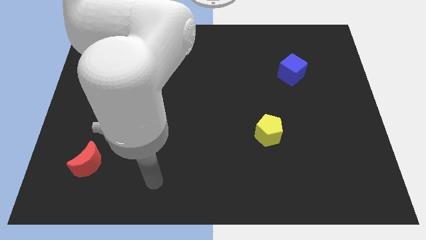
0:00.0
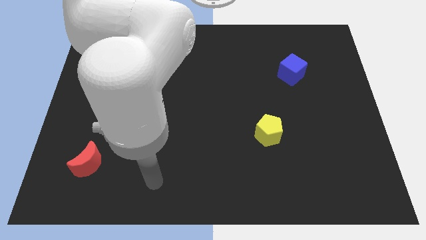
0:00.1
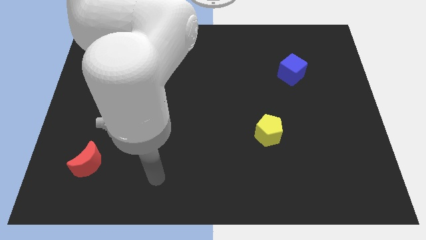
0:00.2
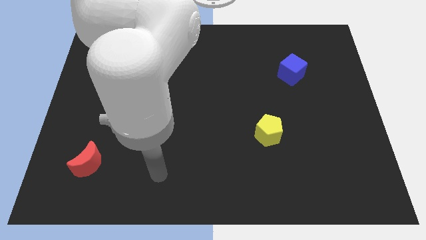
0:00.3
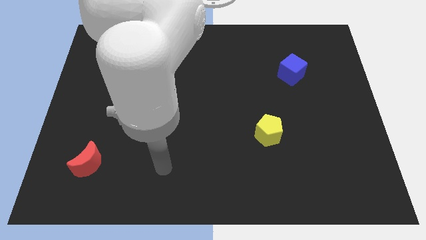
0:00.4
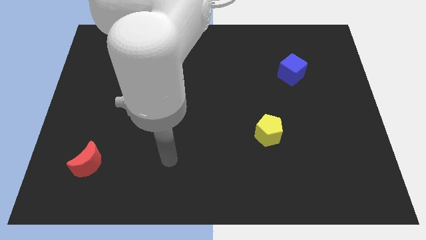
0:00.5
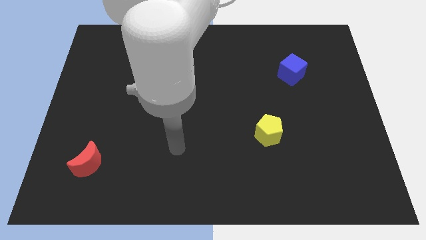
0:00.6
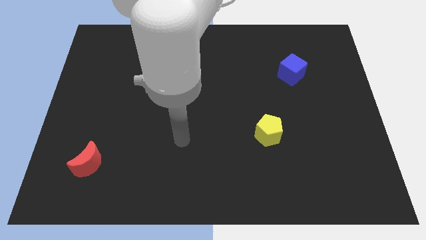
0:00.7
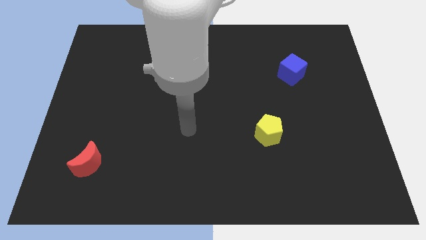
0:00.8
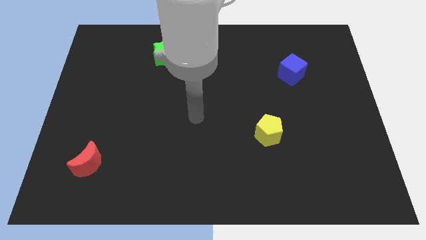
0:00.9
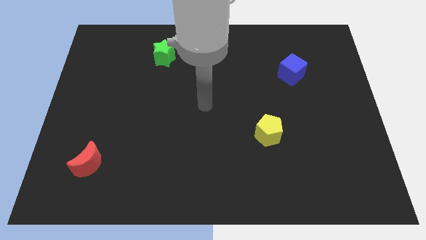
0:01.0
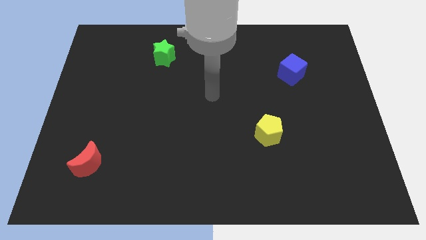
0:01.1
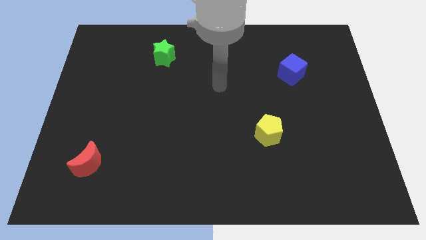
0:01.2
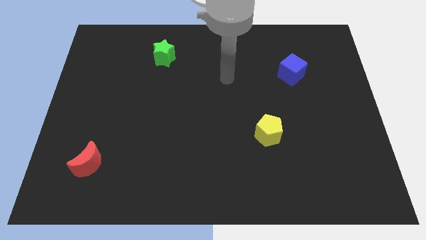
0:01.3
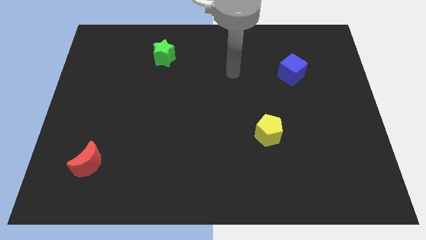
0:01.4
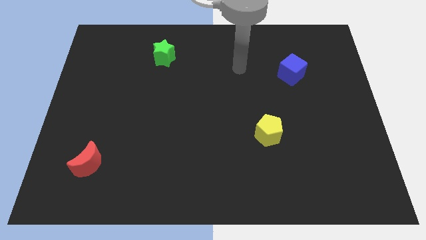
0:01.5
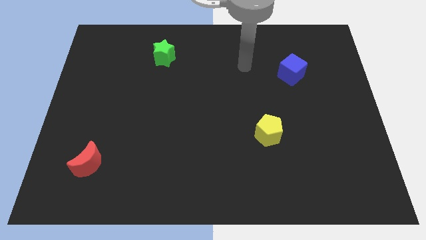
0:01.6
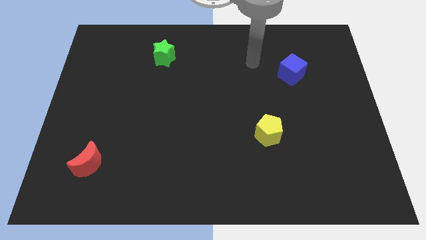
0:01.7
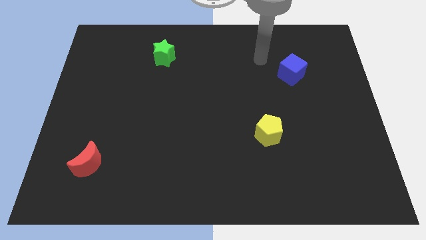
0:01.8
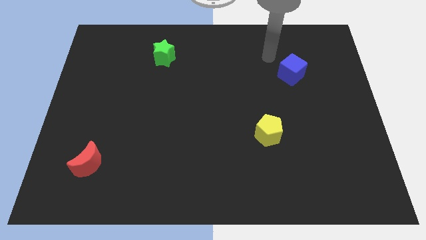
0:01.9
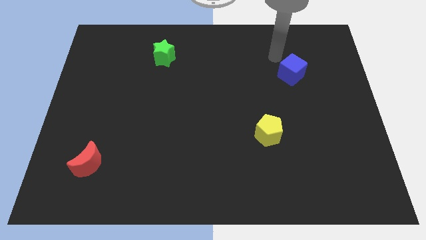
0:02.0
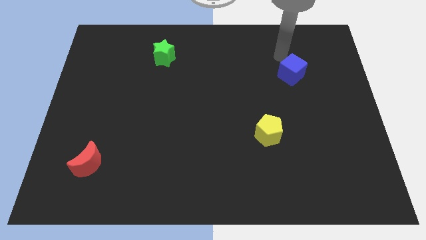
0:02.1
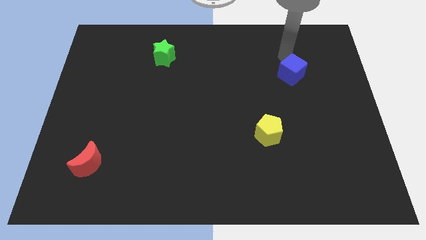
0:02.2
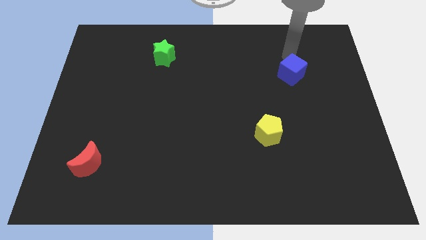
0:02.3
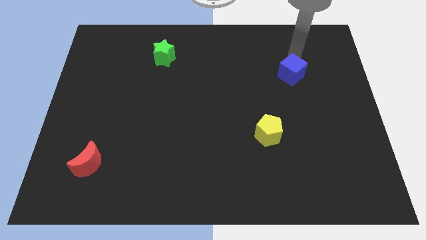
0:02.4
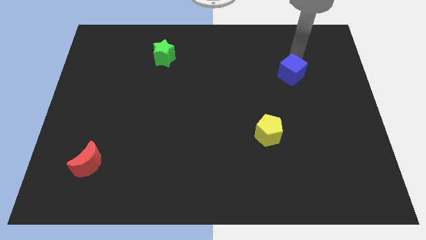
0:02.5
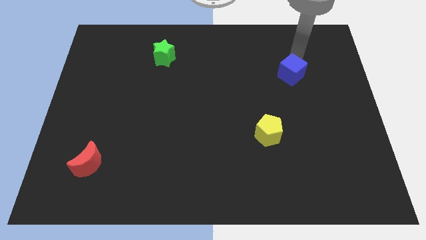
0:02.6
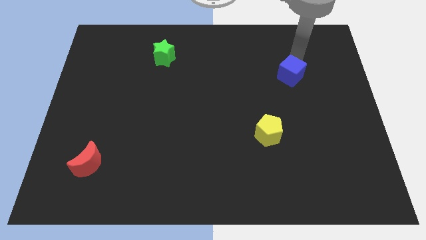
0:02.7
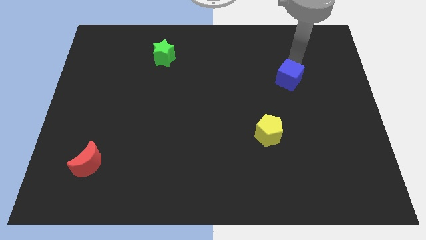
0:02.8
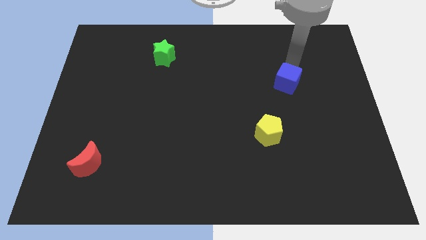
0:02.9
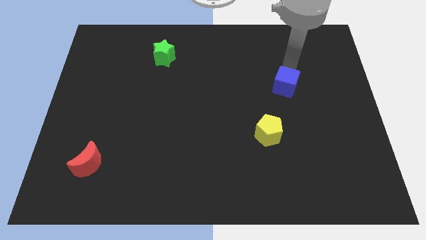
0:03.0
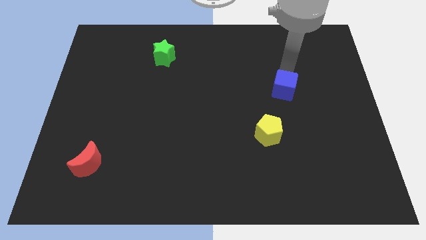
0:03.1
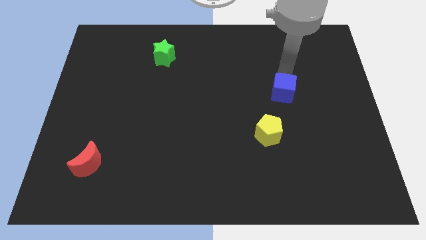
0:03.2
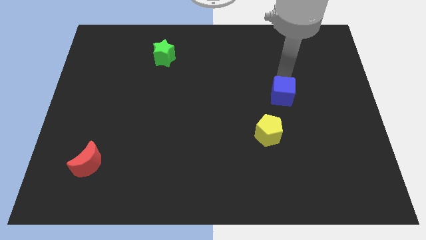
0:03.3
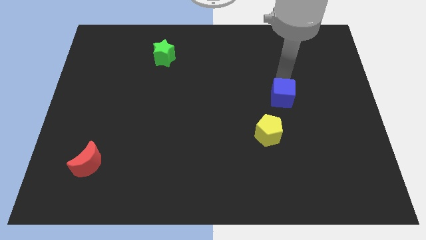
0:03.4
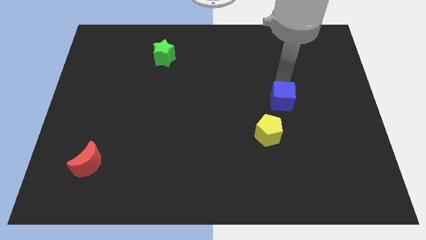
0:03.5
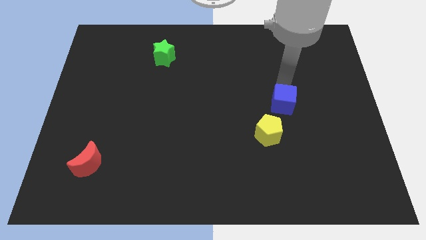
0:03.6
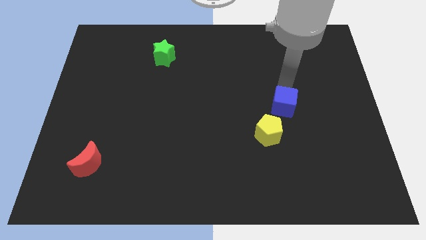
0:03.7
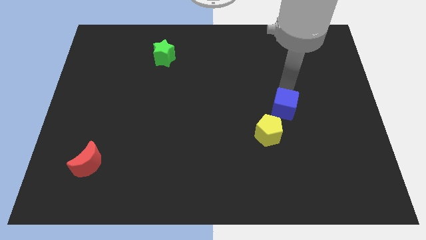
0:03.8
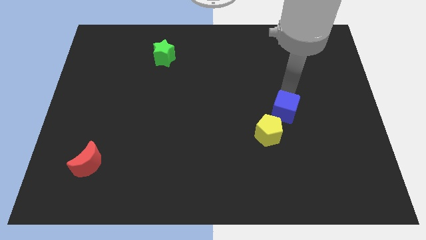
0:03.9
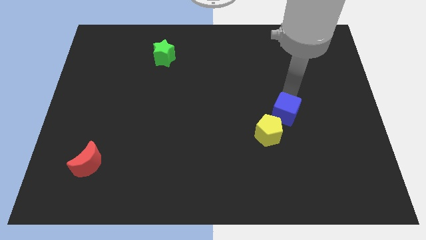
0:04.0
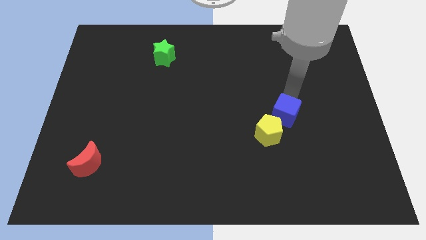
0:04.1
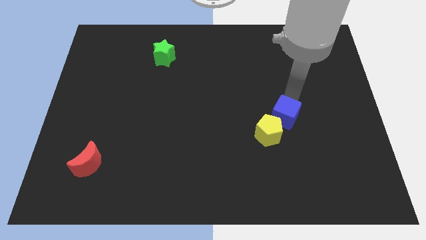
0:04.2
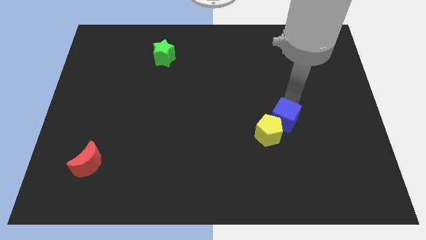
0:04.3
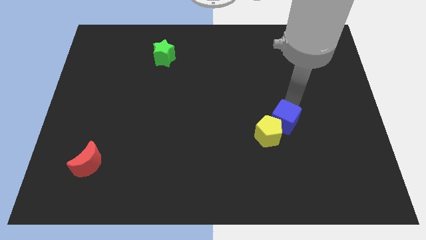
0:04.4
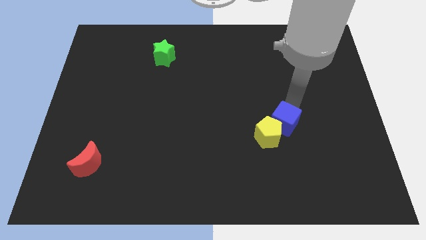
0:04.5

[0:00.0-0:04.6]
slide the cube to the yellow block

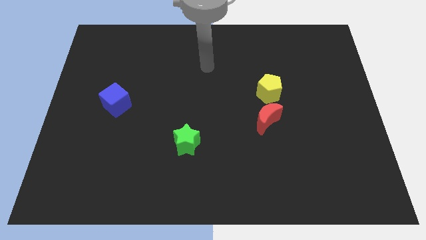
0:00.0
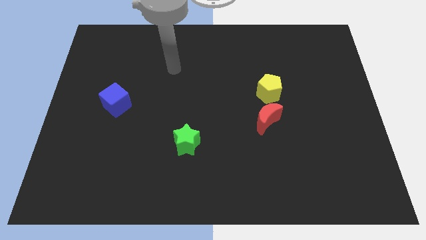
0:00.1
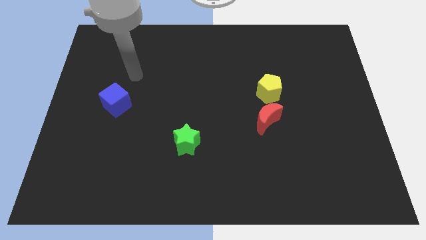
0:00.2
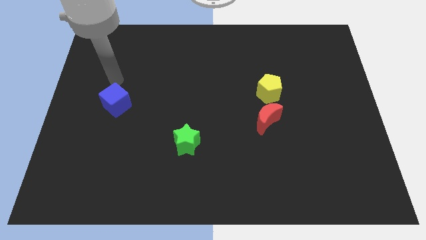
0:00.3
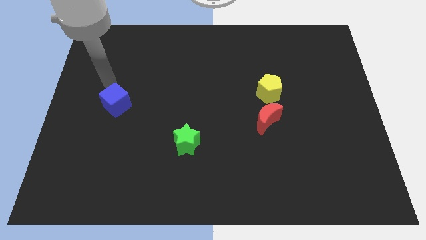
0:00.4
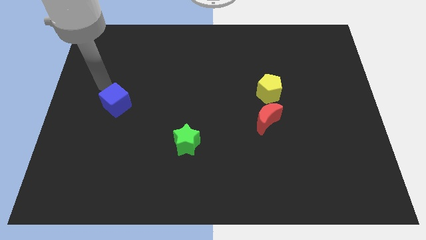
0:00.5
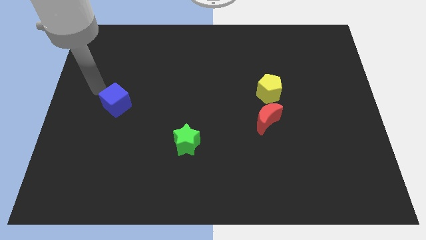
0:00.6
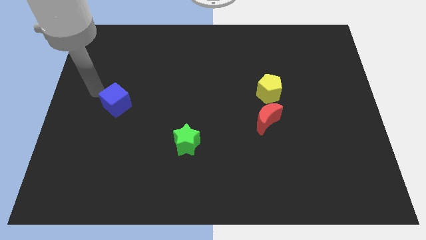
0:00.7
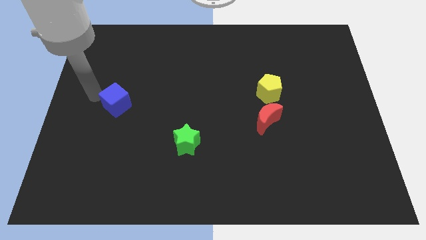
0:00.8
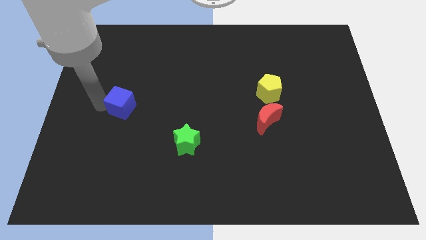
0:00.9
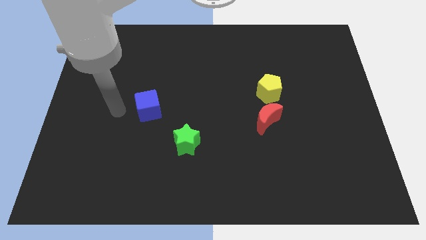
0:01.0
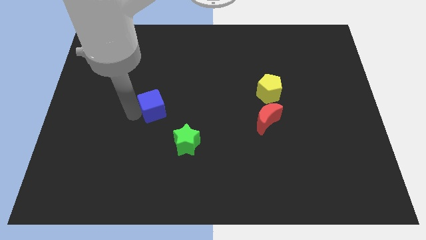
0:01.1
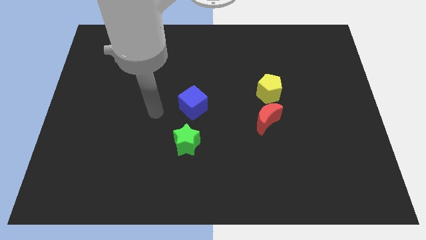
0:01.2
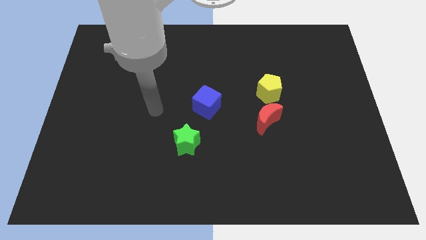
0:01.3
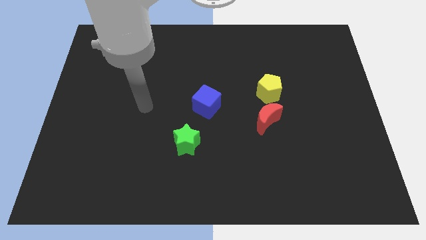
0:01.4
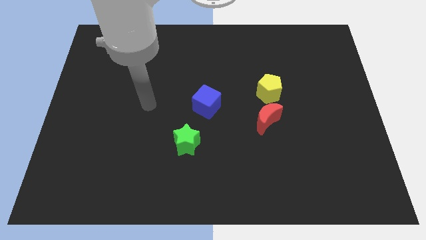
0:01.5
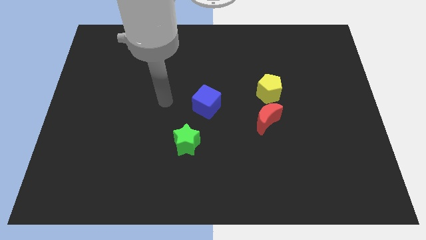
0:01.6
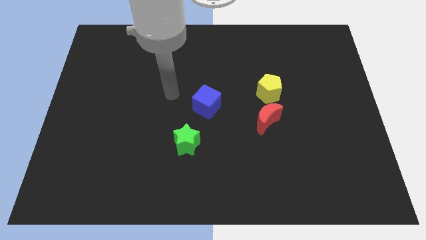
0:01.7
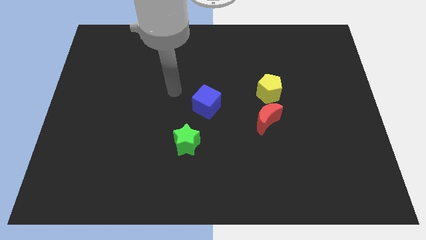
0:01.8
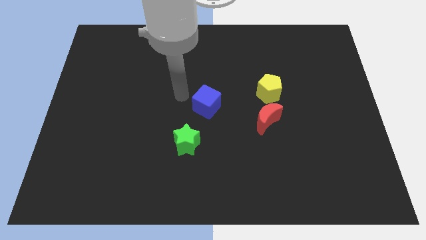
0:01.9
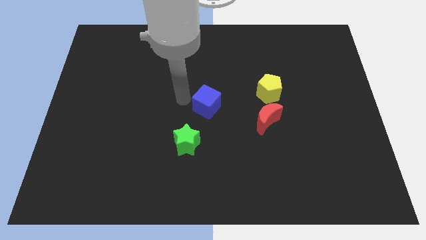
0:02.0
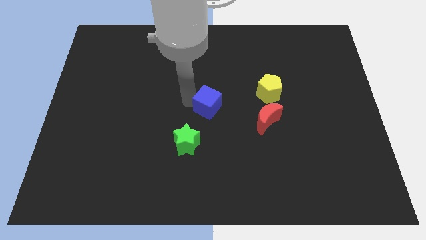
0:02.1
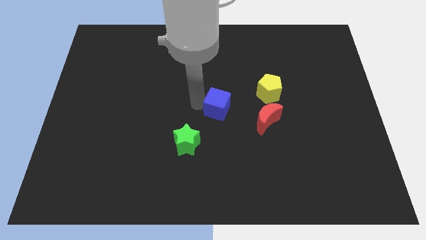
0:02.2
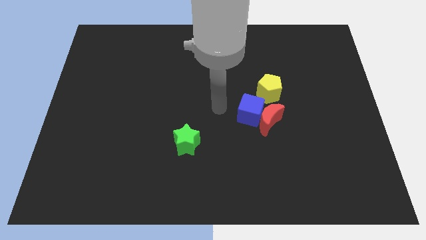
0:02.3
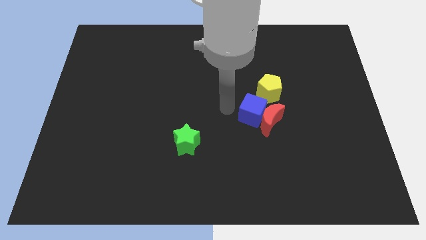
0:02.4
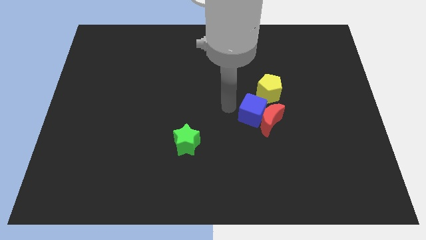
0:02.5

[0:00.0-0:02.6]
move the cube next to the red moon

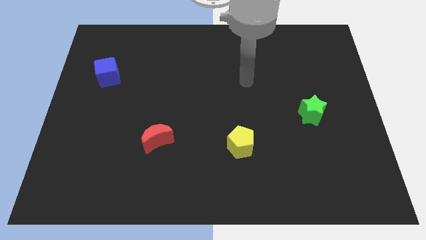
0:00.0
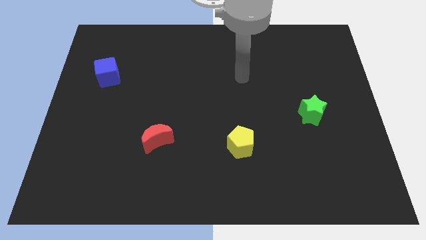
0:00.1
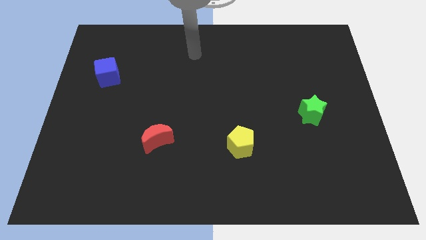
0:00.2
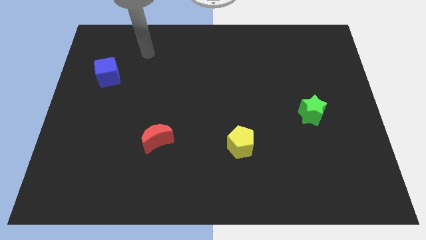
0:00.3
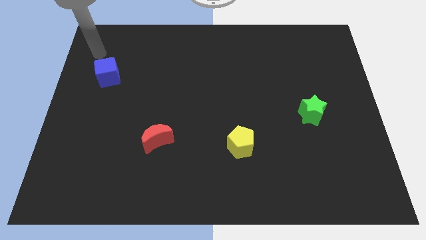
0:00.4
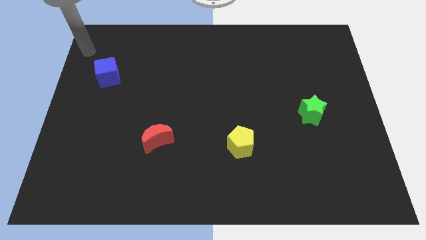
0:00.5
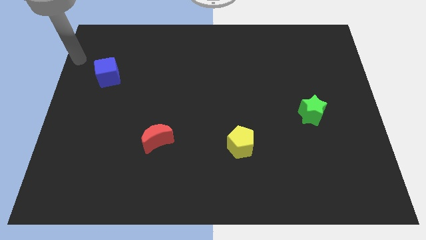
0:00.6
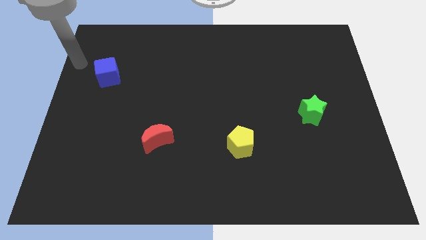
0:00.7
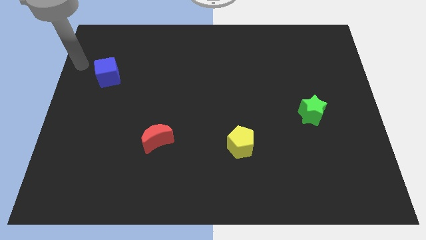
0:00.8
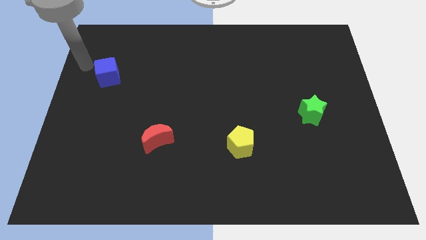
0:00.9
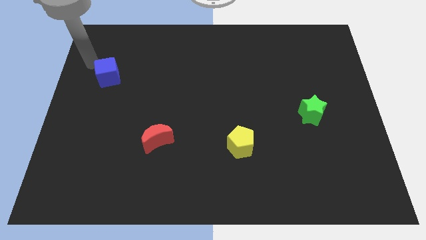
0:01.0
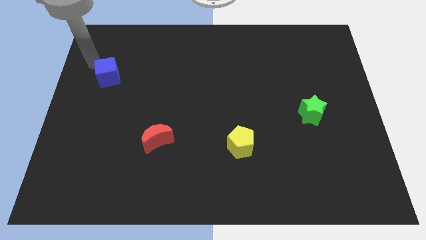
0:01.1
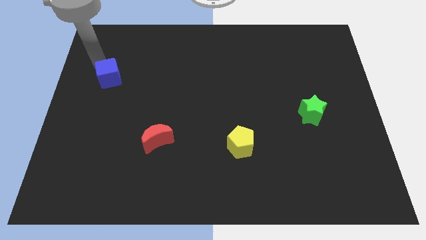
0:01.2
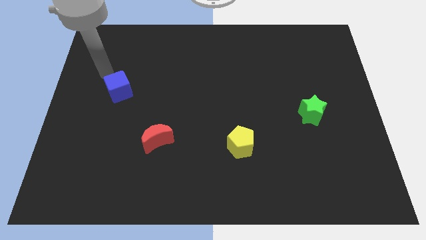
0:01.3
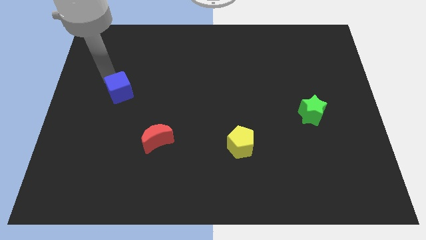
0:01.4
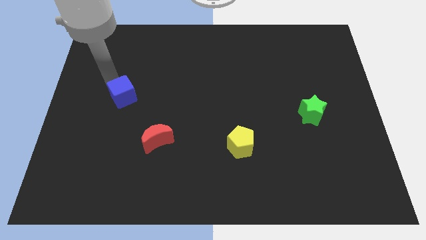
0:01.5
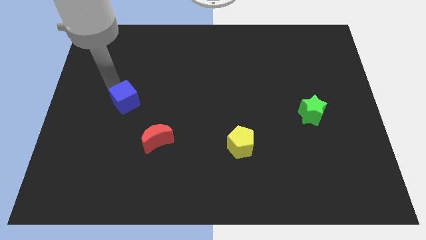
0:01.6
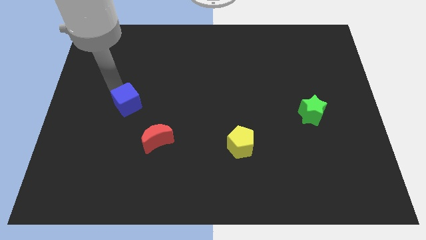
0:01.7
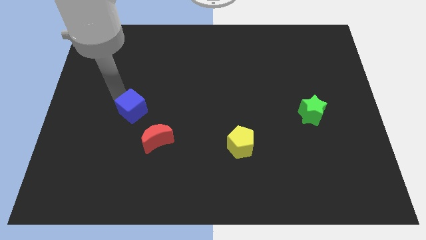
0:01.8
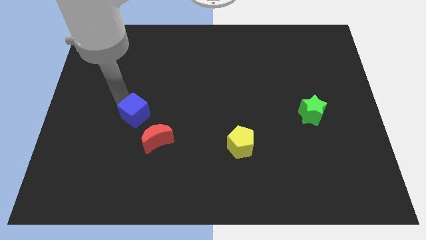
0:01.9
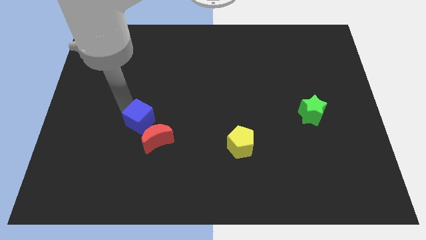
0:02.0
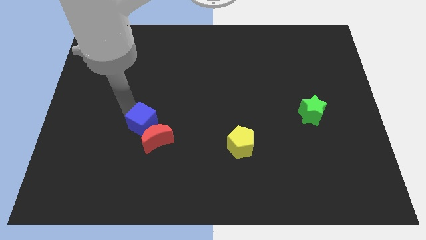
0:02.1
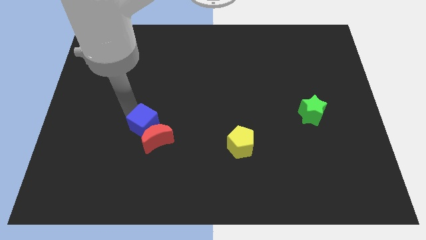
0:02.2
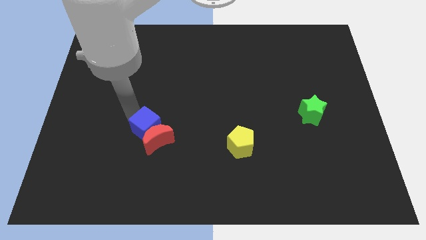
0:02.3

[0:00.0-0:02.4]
slide the cube to the red block
